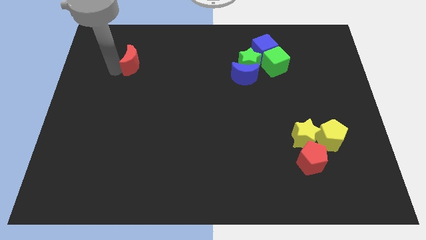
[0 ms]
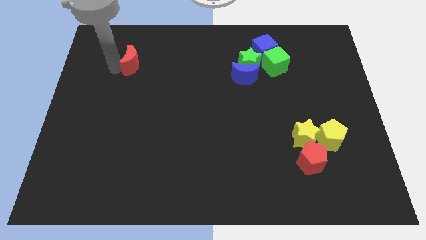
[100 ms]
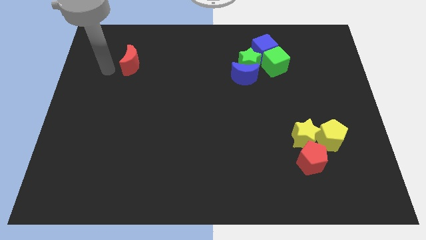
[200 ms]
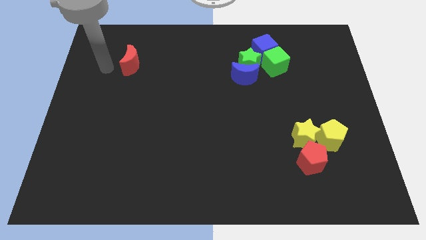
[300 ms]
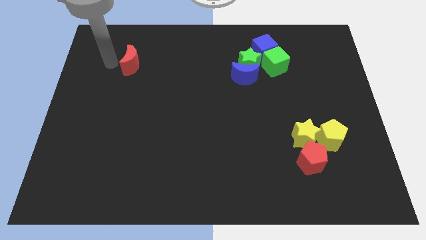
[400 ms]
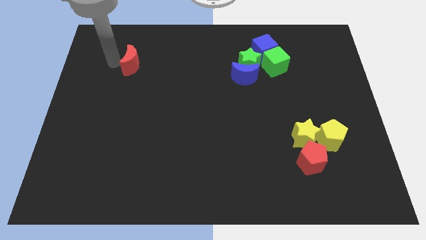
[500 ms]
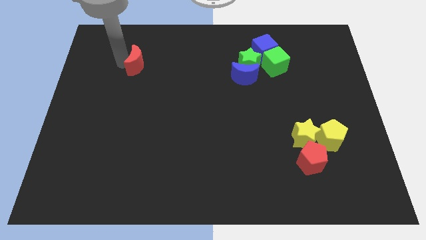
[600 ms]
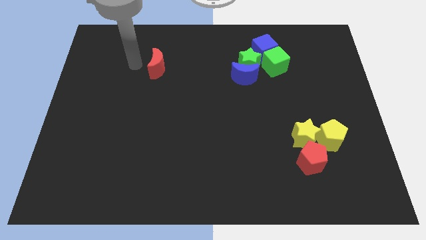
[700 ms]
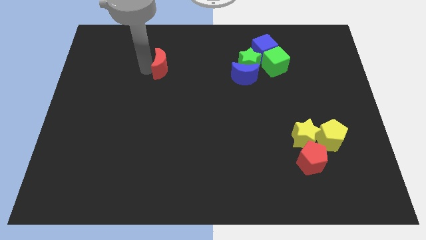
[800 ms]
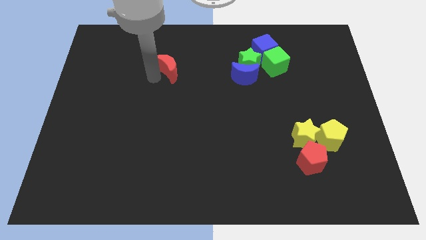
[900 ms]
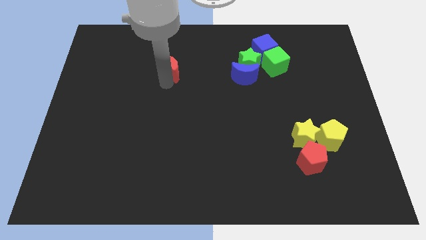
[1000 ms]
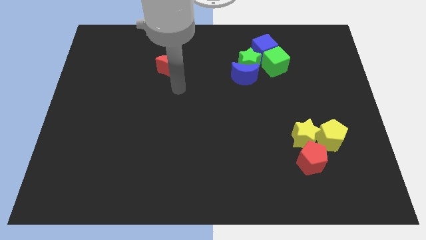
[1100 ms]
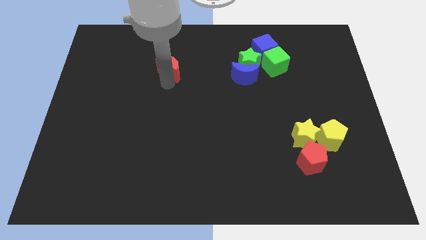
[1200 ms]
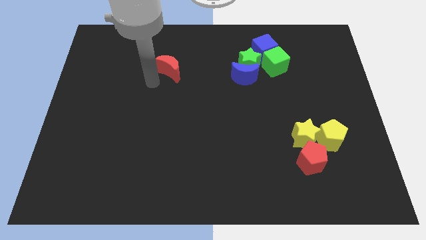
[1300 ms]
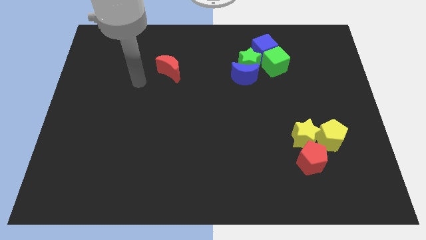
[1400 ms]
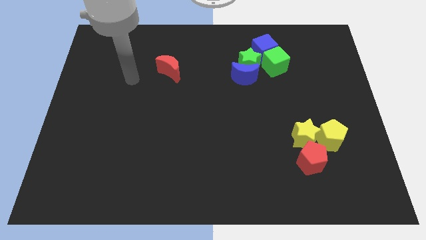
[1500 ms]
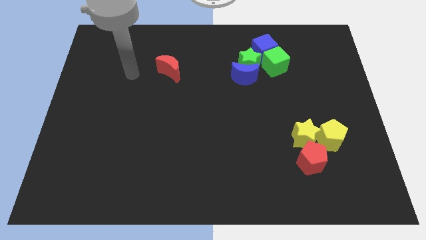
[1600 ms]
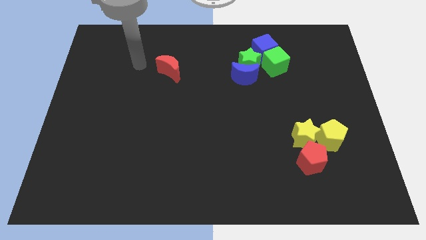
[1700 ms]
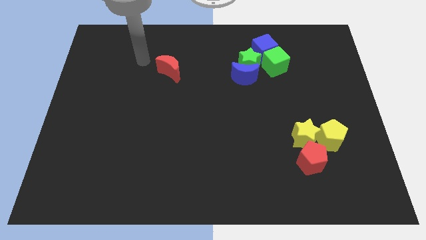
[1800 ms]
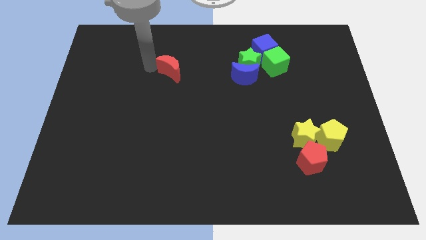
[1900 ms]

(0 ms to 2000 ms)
drag red moon towards right side of the board

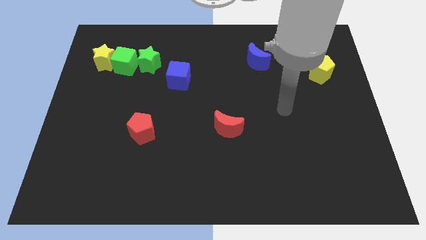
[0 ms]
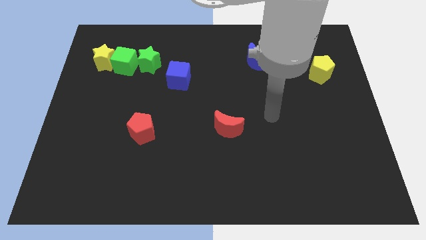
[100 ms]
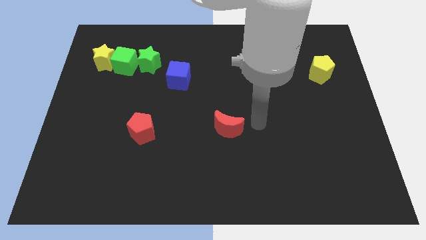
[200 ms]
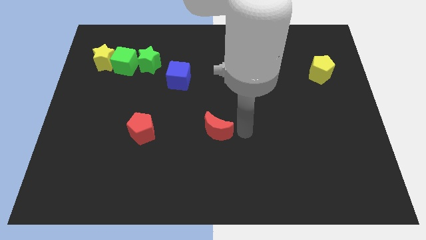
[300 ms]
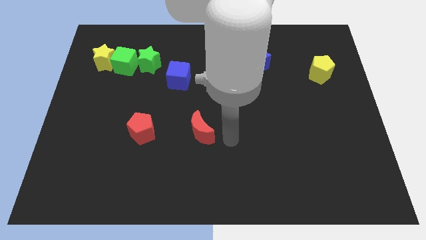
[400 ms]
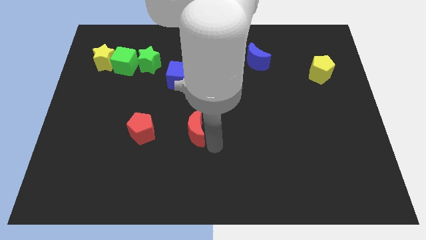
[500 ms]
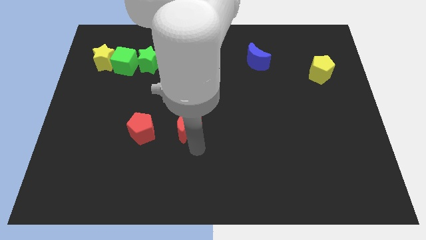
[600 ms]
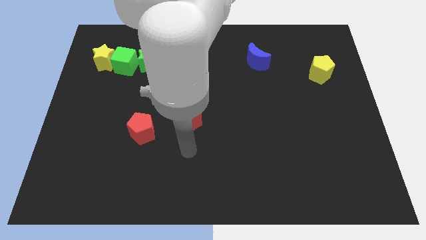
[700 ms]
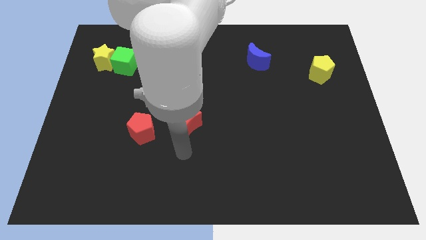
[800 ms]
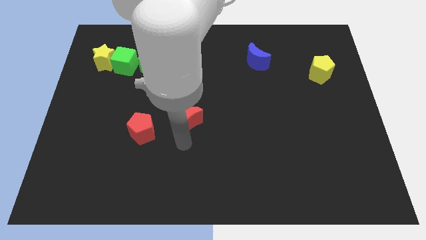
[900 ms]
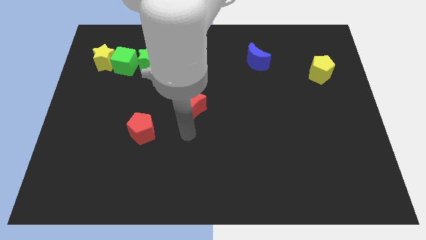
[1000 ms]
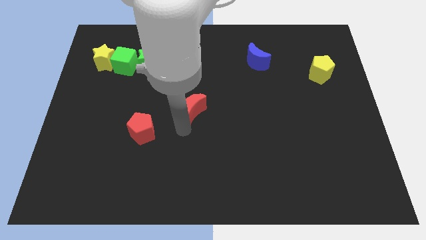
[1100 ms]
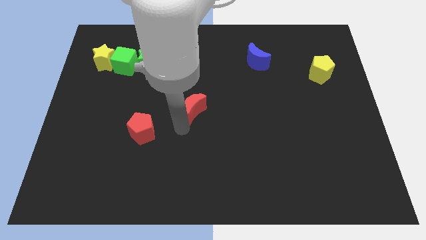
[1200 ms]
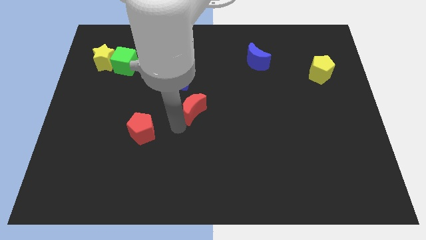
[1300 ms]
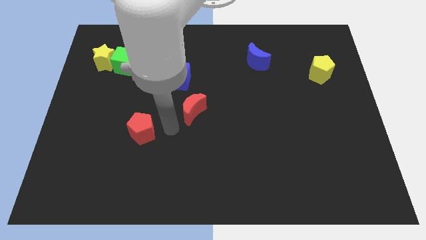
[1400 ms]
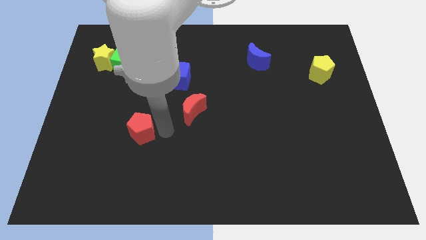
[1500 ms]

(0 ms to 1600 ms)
push the red moon parallel to the bottom right of the blue cube

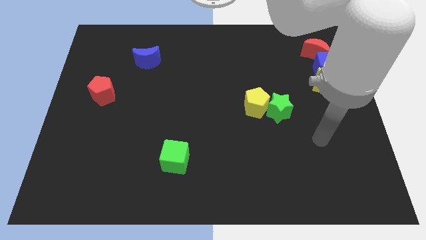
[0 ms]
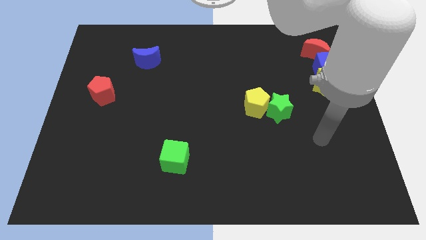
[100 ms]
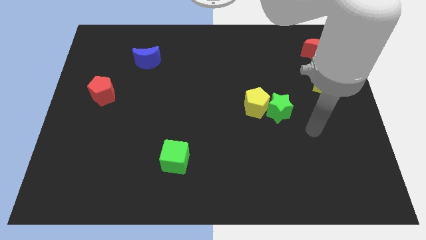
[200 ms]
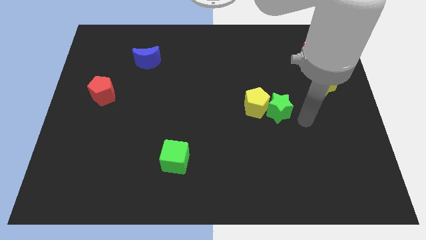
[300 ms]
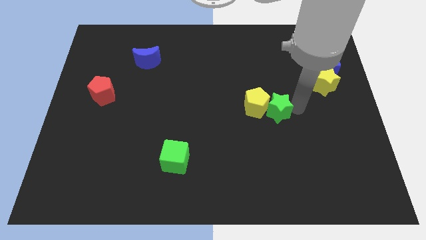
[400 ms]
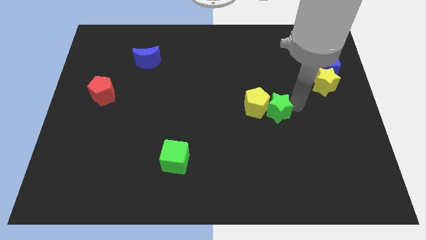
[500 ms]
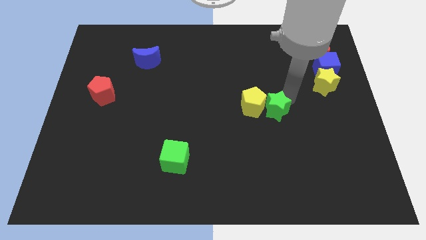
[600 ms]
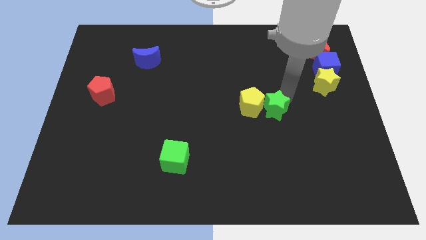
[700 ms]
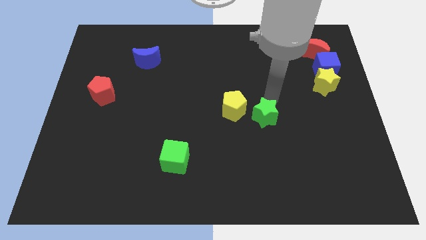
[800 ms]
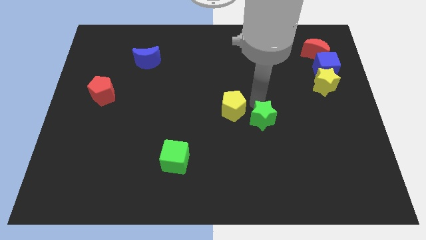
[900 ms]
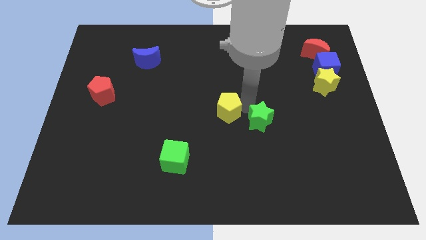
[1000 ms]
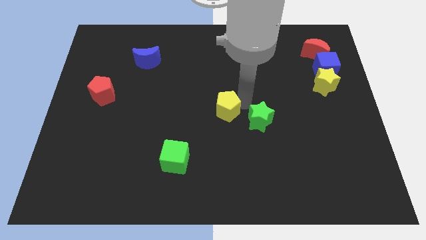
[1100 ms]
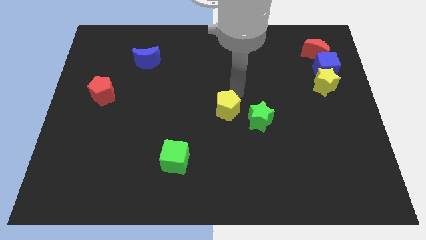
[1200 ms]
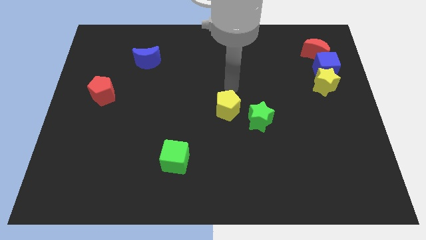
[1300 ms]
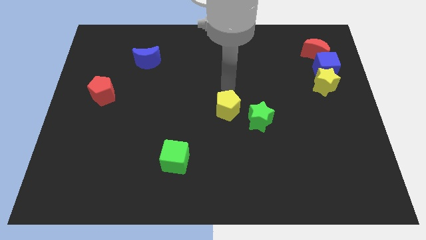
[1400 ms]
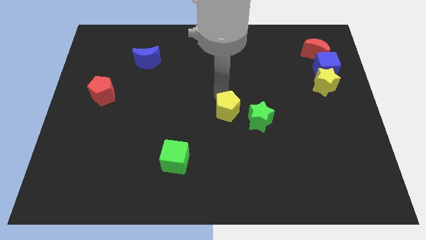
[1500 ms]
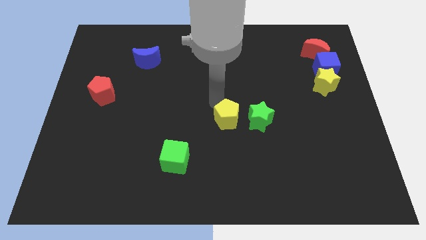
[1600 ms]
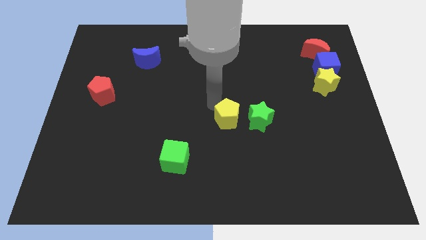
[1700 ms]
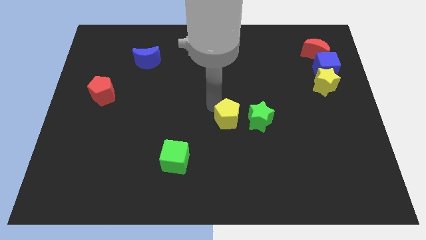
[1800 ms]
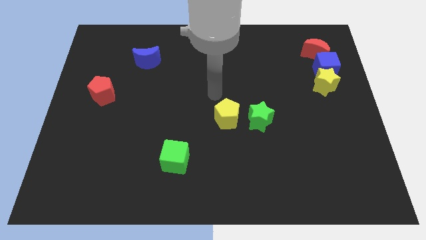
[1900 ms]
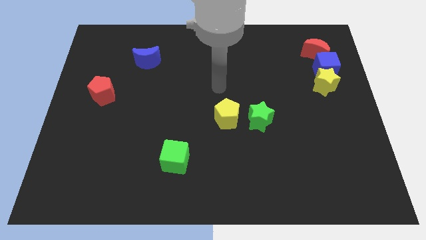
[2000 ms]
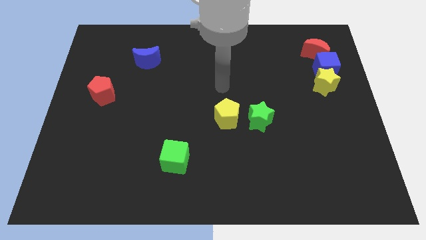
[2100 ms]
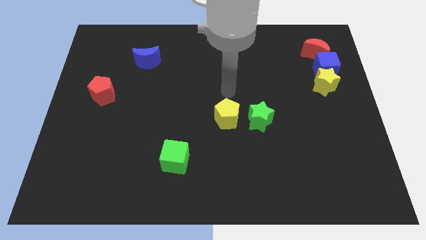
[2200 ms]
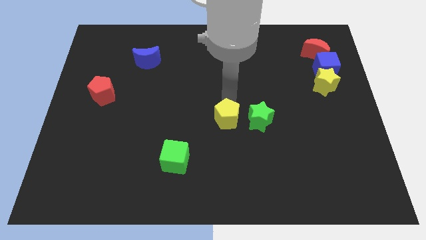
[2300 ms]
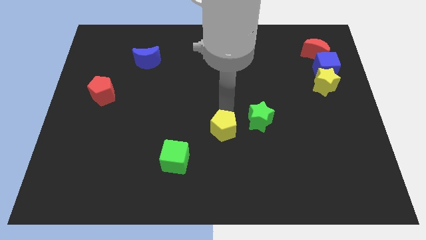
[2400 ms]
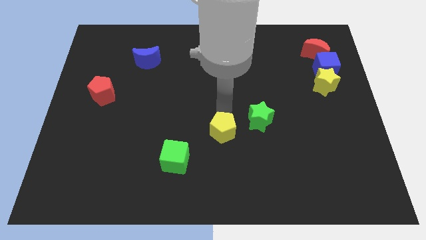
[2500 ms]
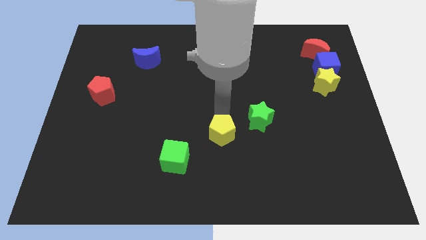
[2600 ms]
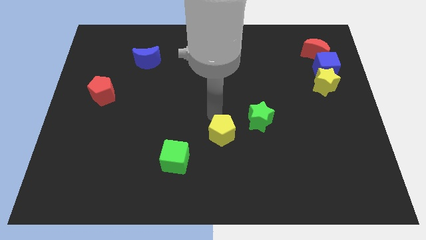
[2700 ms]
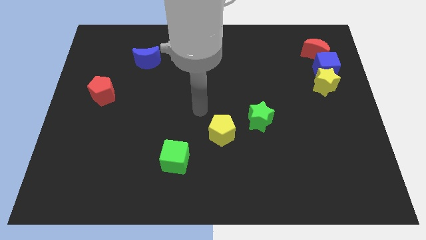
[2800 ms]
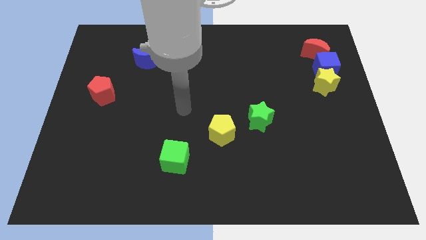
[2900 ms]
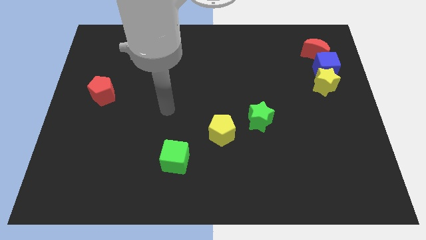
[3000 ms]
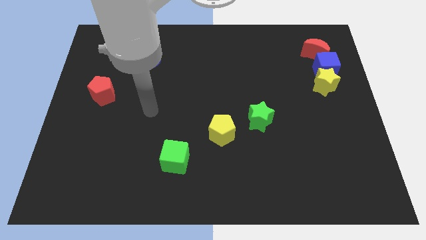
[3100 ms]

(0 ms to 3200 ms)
push yellow pentagon slightly downwards

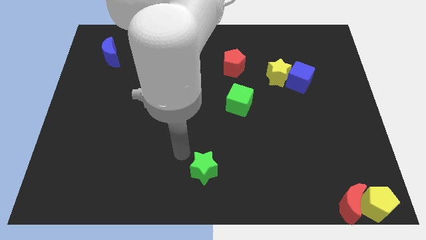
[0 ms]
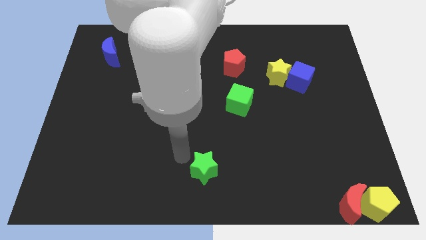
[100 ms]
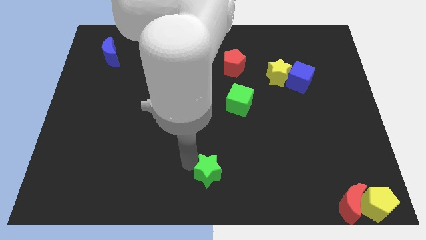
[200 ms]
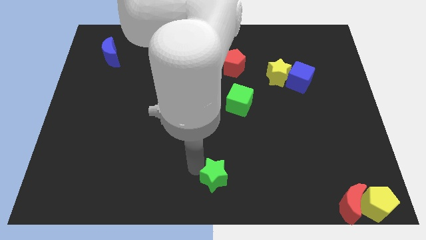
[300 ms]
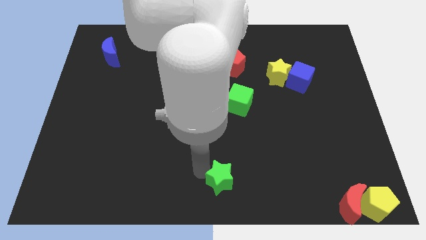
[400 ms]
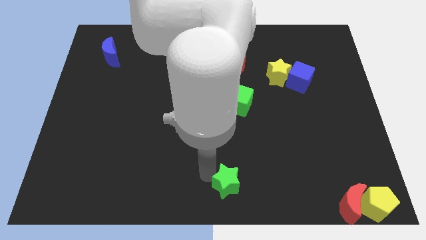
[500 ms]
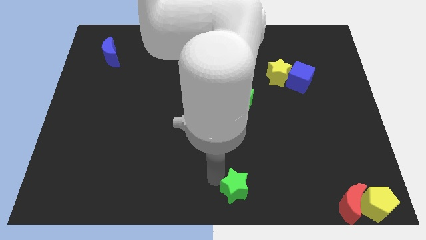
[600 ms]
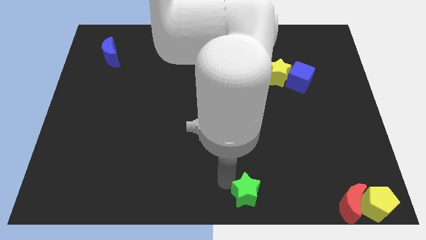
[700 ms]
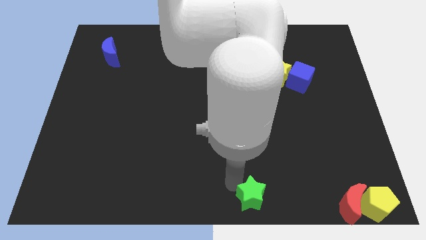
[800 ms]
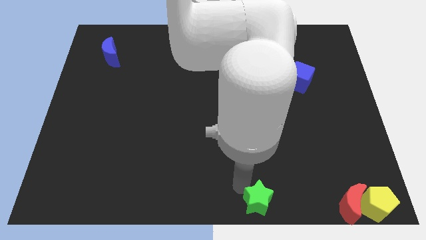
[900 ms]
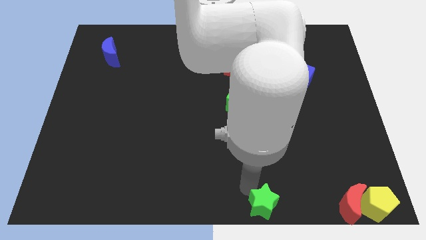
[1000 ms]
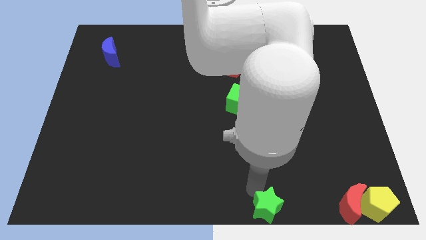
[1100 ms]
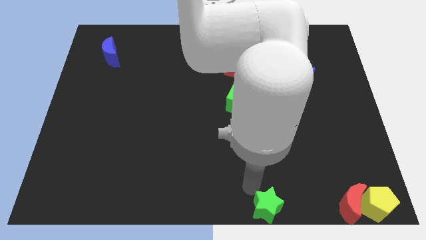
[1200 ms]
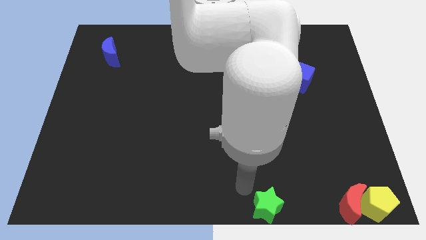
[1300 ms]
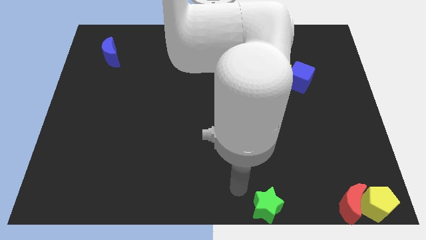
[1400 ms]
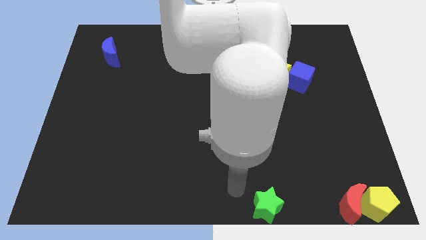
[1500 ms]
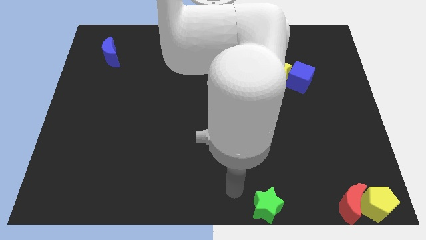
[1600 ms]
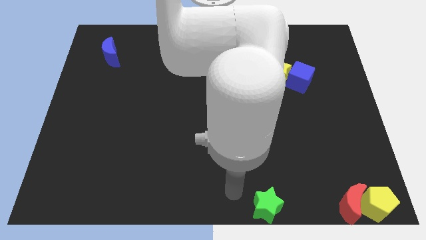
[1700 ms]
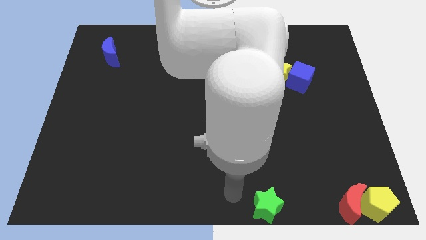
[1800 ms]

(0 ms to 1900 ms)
place the green star to the left of the red moon

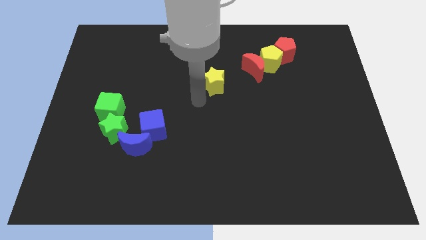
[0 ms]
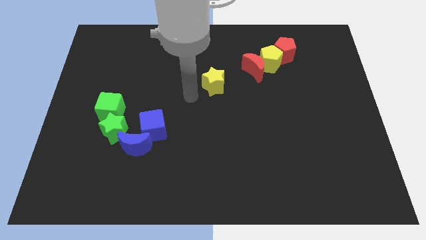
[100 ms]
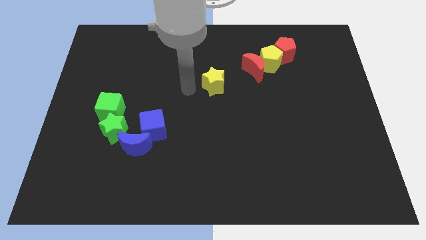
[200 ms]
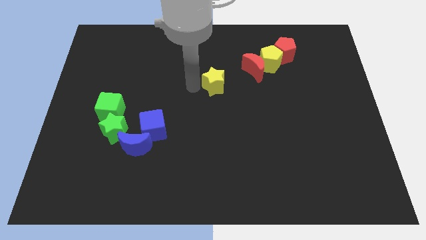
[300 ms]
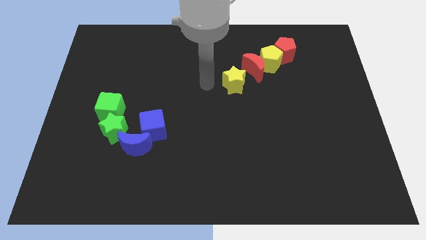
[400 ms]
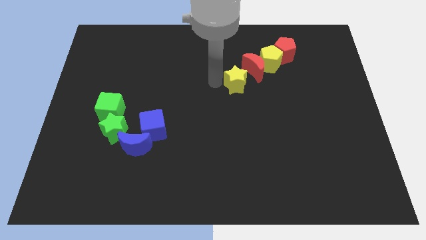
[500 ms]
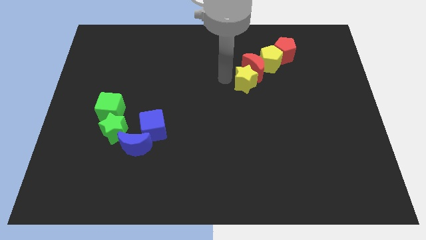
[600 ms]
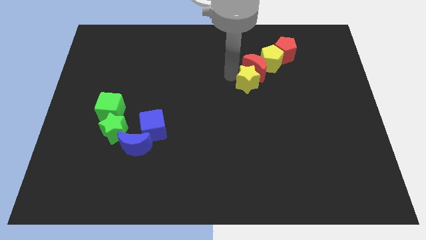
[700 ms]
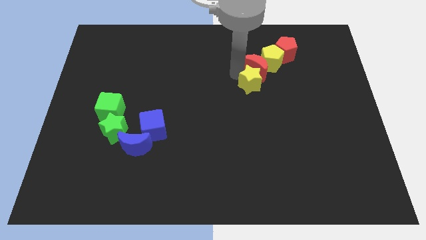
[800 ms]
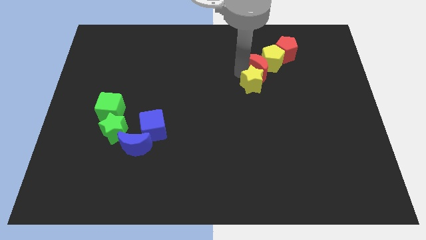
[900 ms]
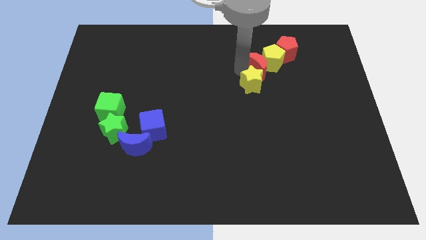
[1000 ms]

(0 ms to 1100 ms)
place the yellow star below the red crescent
